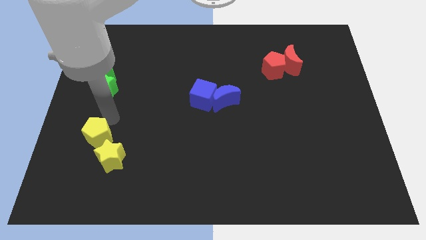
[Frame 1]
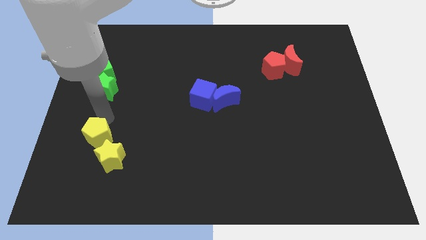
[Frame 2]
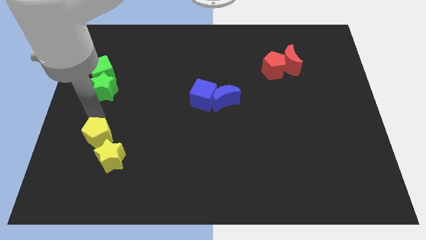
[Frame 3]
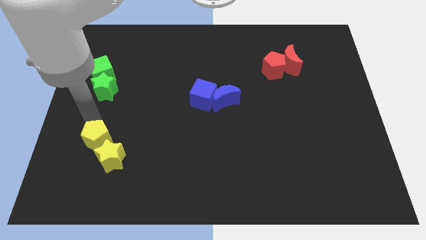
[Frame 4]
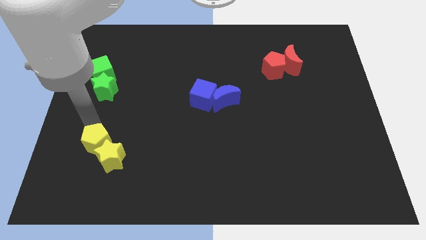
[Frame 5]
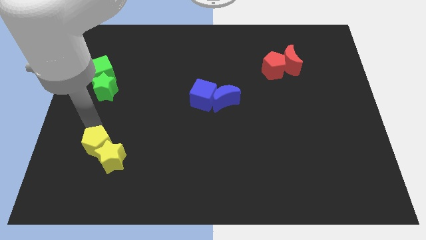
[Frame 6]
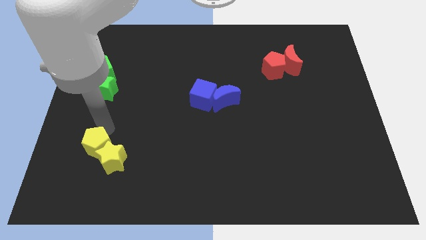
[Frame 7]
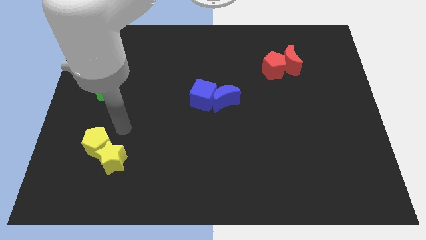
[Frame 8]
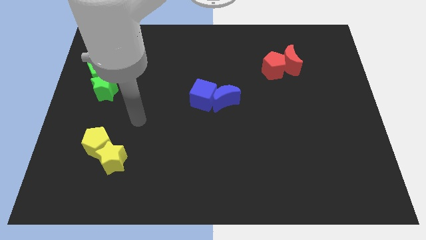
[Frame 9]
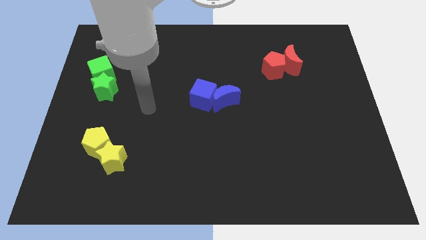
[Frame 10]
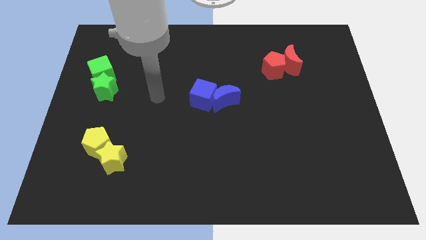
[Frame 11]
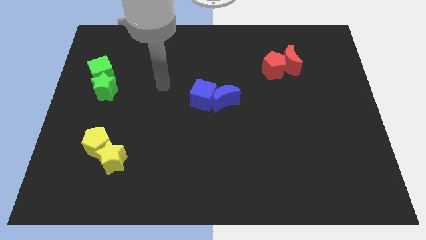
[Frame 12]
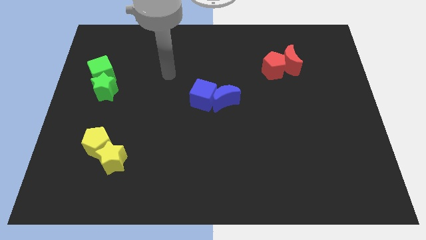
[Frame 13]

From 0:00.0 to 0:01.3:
slightly push the yellow pentagon downwards

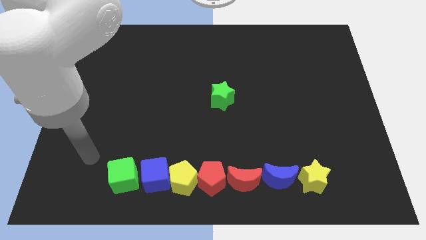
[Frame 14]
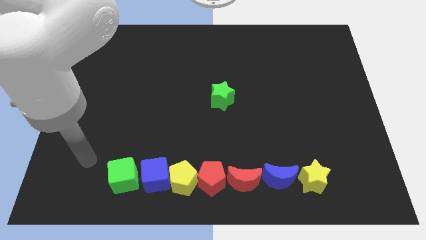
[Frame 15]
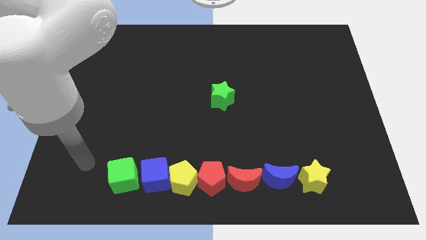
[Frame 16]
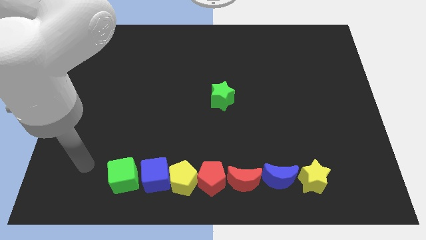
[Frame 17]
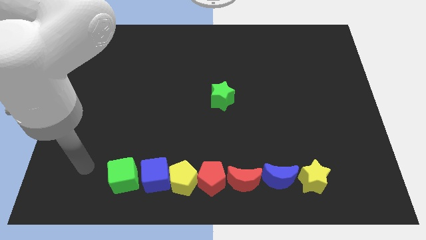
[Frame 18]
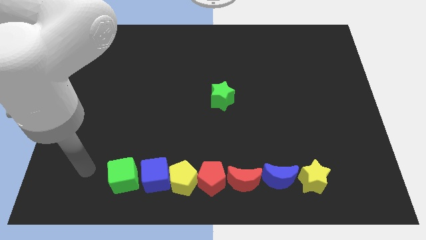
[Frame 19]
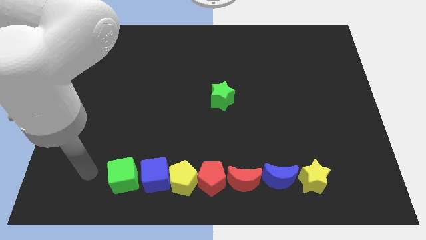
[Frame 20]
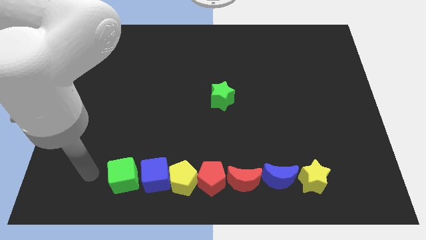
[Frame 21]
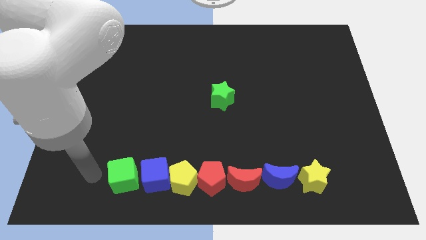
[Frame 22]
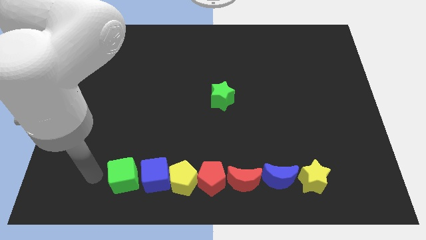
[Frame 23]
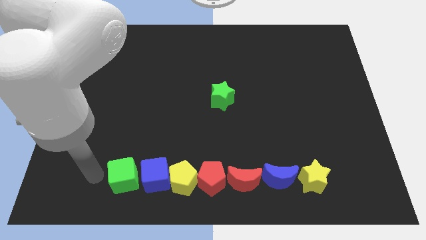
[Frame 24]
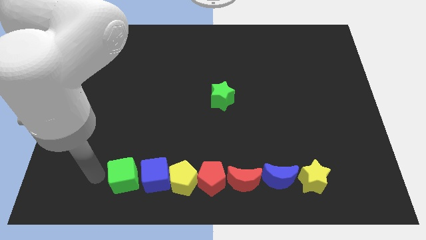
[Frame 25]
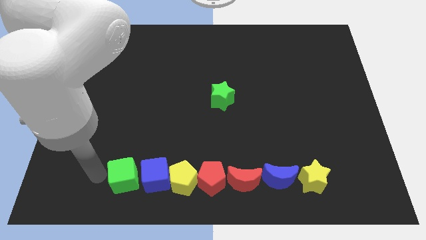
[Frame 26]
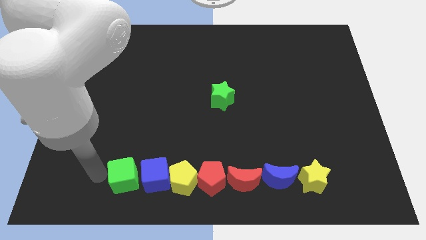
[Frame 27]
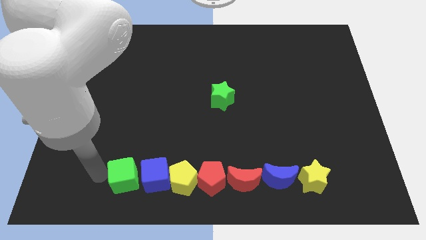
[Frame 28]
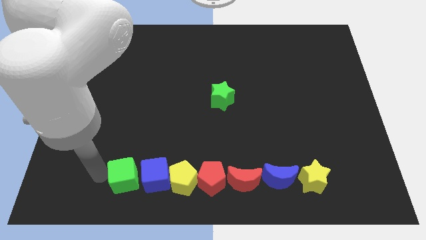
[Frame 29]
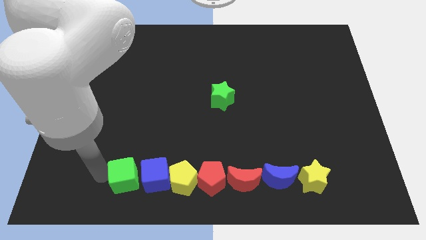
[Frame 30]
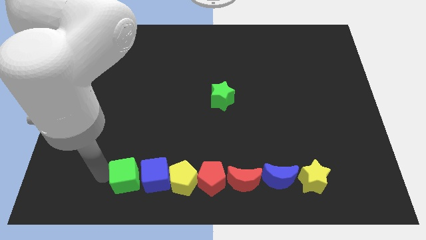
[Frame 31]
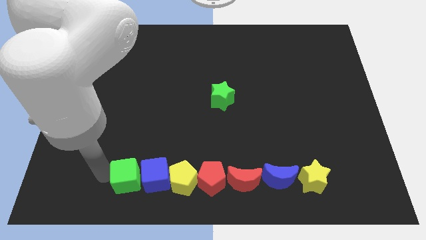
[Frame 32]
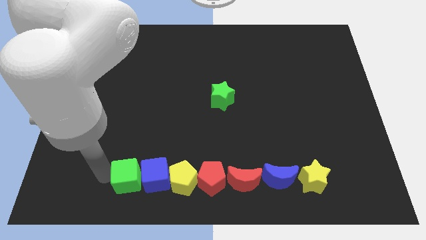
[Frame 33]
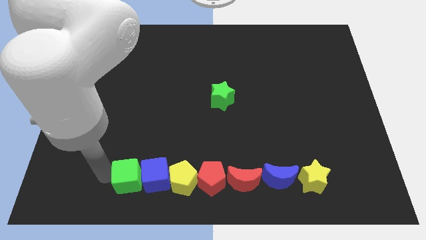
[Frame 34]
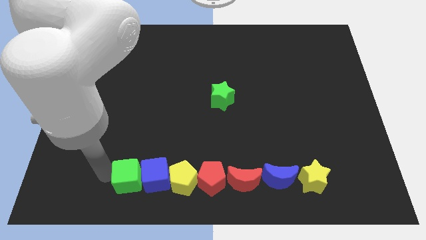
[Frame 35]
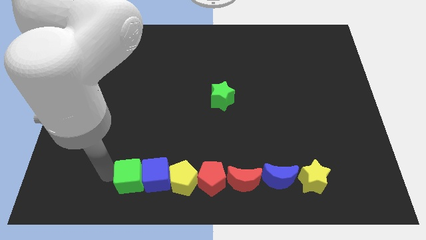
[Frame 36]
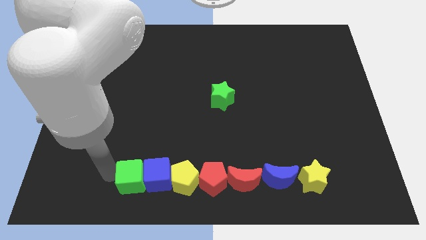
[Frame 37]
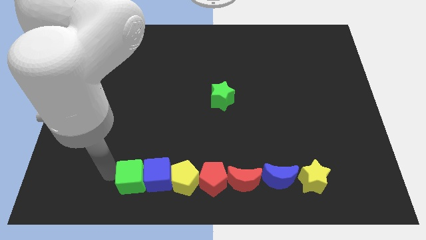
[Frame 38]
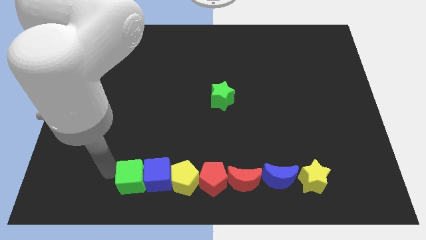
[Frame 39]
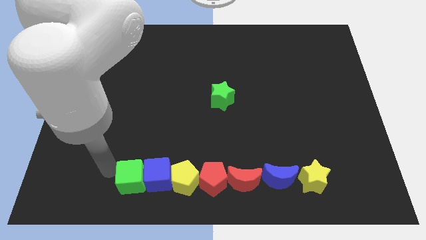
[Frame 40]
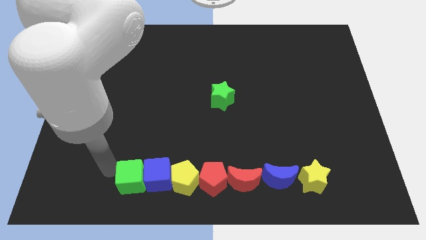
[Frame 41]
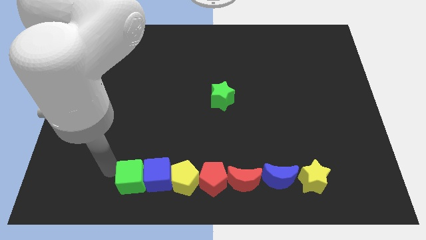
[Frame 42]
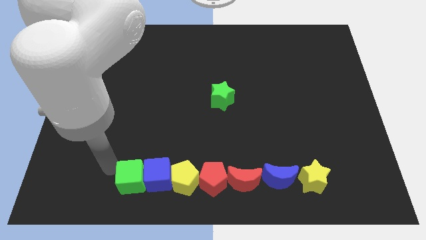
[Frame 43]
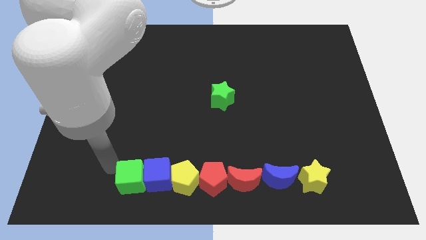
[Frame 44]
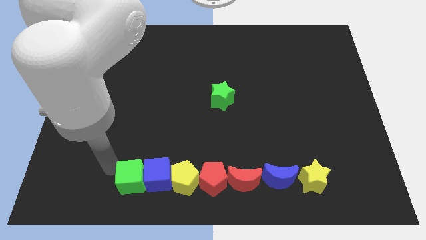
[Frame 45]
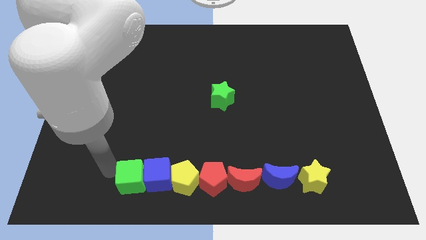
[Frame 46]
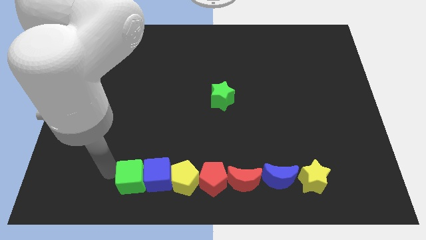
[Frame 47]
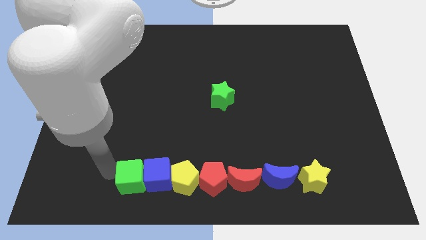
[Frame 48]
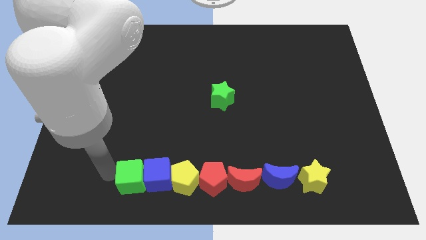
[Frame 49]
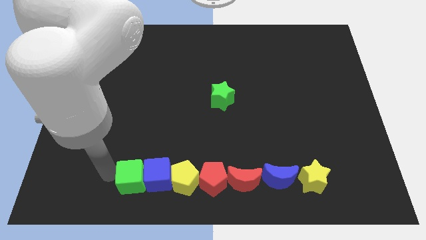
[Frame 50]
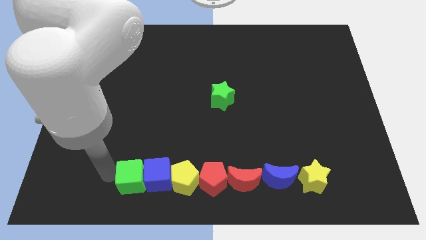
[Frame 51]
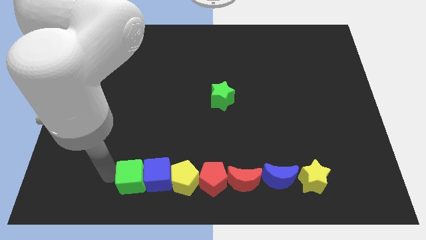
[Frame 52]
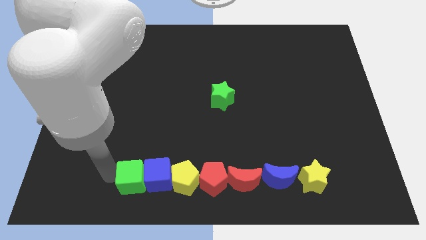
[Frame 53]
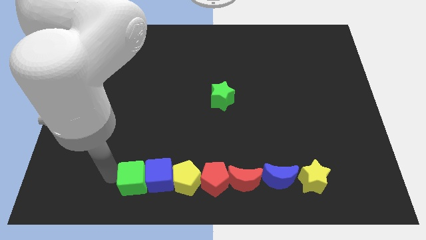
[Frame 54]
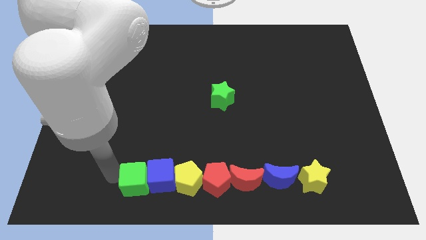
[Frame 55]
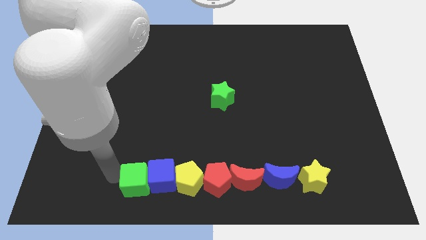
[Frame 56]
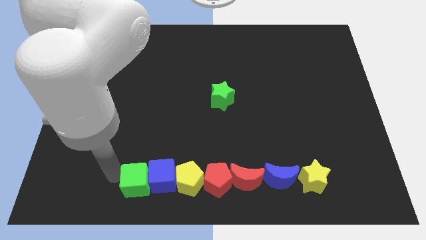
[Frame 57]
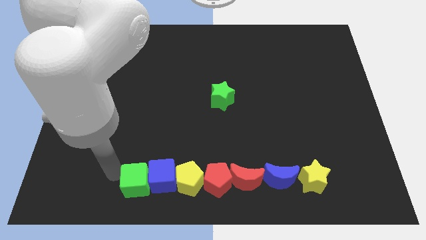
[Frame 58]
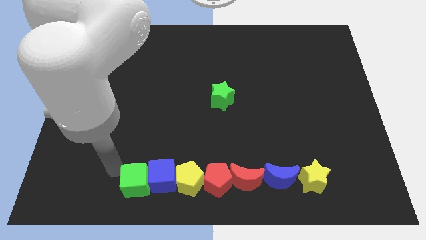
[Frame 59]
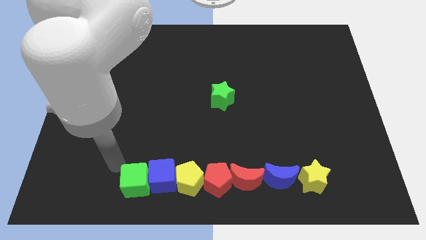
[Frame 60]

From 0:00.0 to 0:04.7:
push the green cube into the blue cube

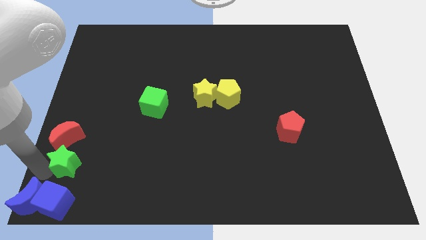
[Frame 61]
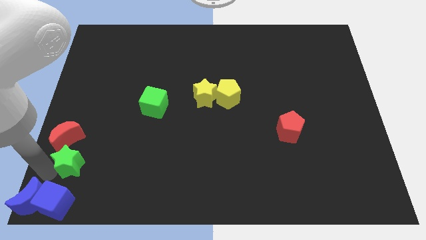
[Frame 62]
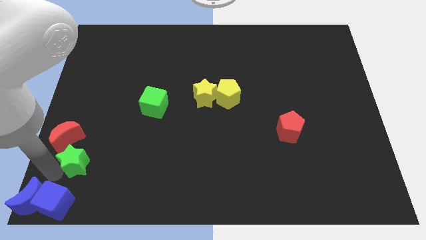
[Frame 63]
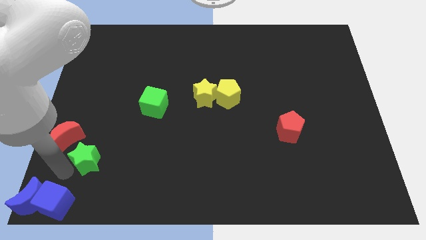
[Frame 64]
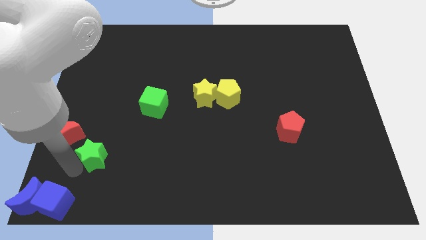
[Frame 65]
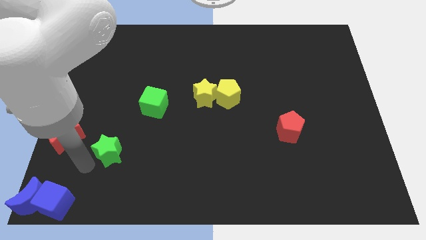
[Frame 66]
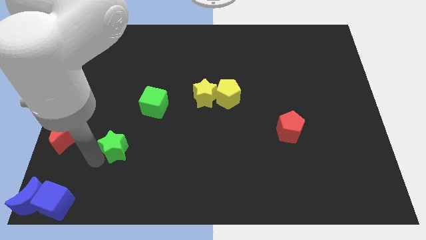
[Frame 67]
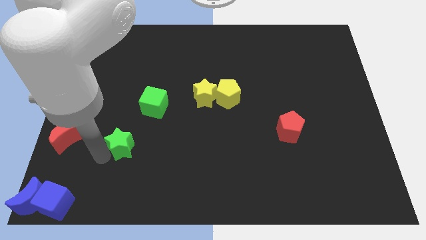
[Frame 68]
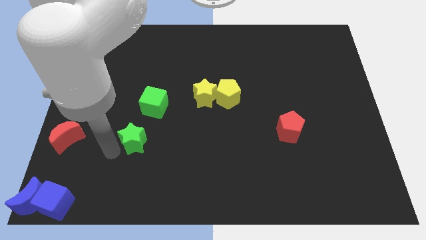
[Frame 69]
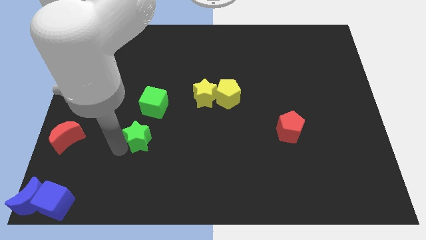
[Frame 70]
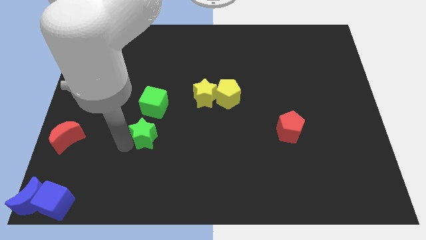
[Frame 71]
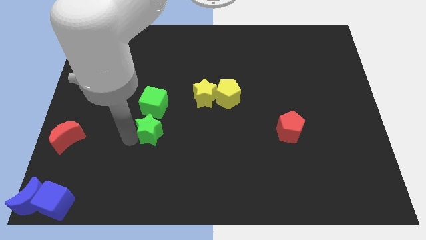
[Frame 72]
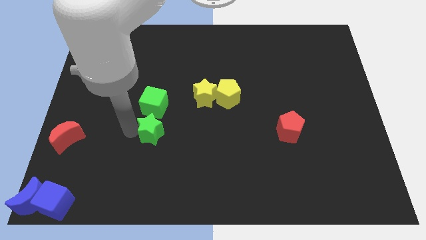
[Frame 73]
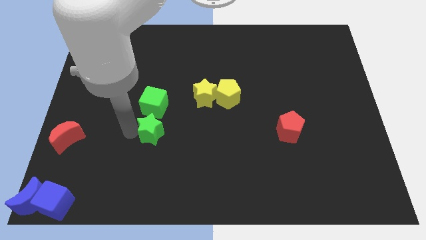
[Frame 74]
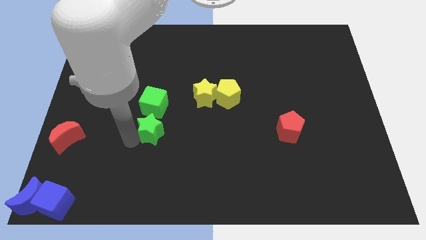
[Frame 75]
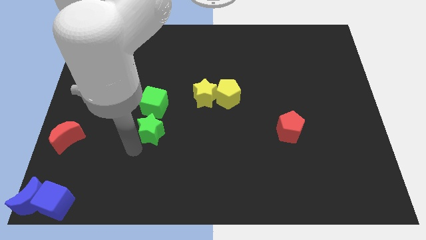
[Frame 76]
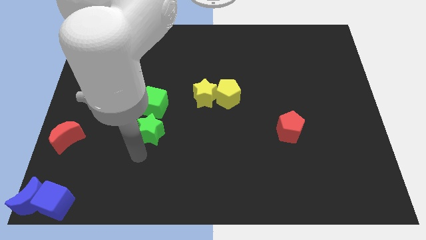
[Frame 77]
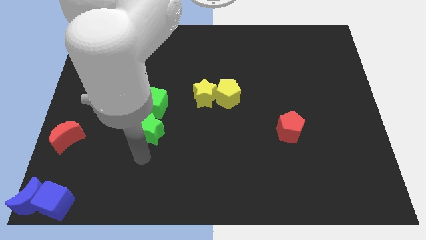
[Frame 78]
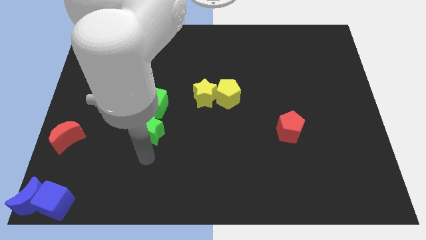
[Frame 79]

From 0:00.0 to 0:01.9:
separate the green star from the red moon

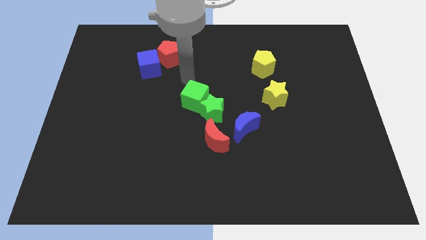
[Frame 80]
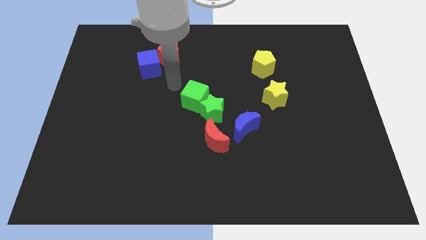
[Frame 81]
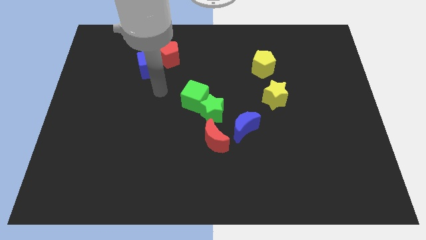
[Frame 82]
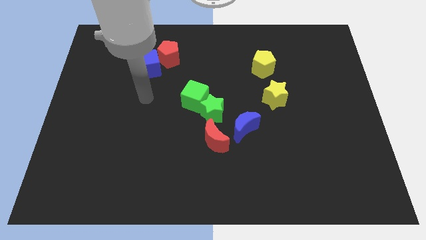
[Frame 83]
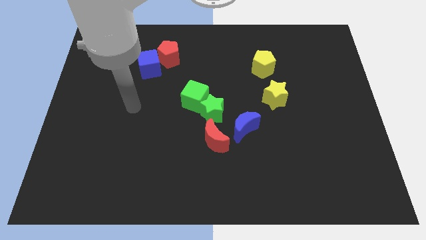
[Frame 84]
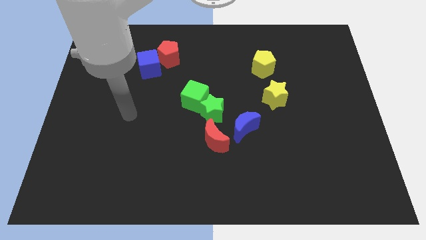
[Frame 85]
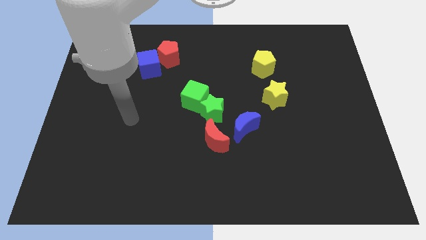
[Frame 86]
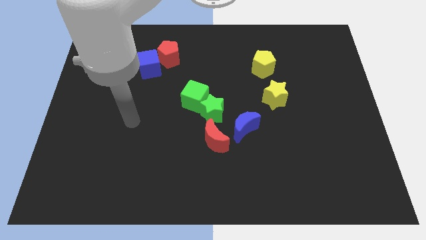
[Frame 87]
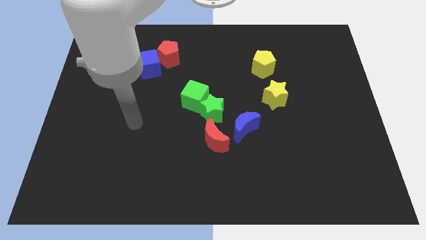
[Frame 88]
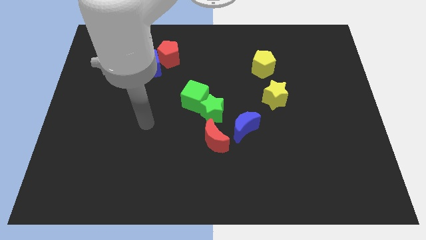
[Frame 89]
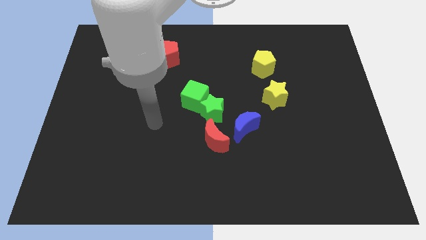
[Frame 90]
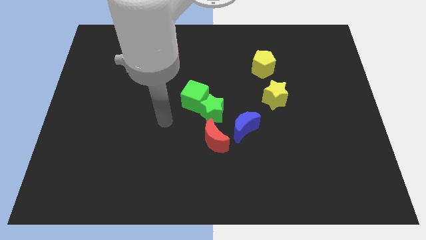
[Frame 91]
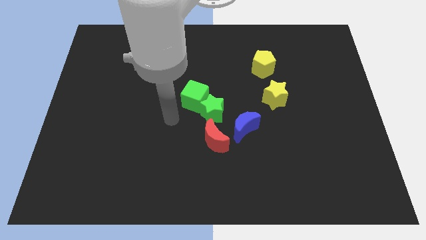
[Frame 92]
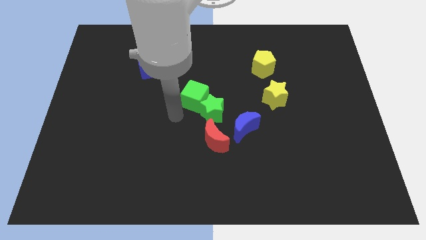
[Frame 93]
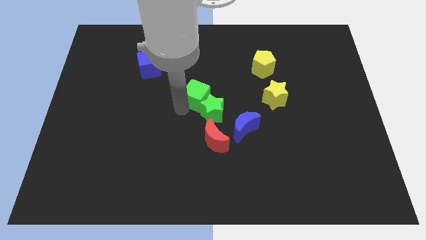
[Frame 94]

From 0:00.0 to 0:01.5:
point the arm below the green cube
